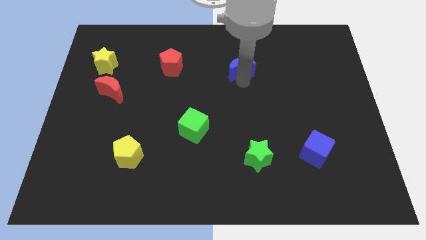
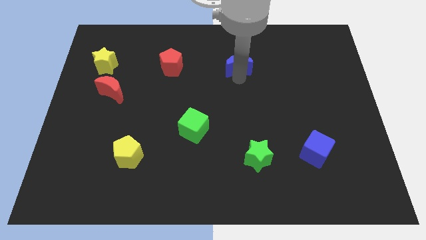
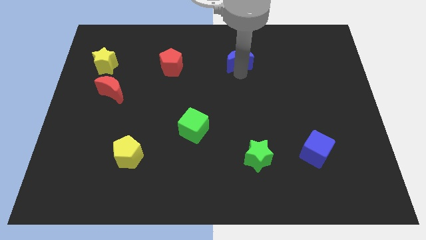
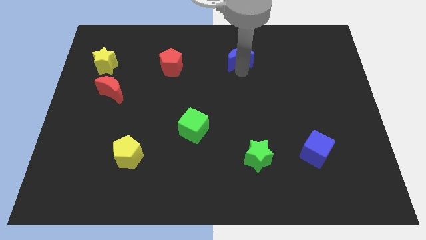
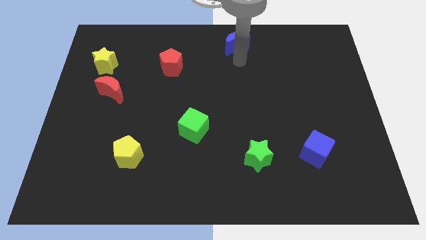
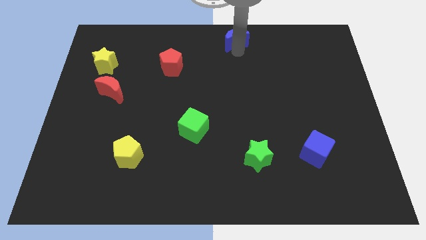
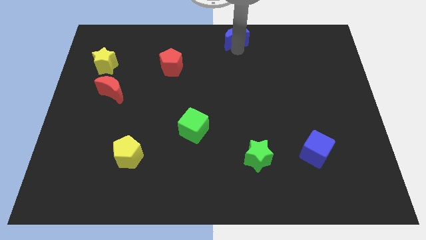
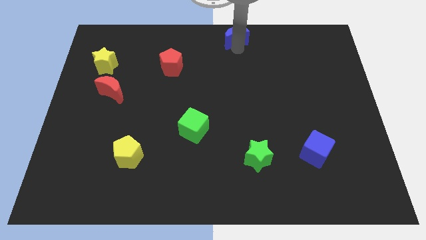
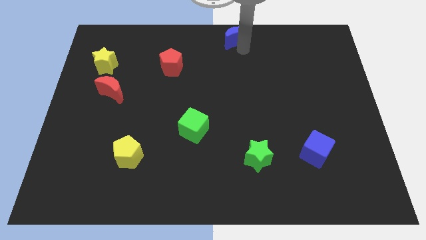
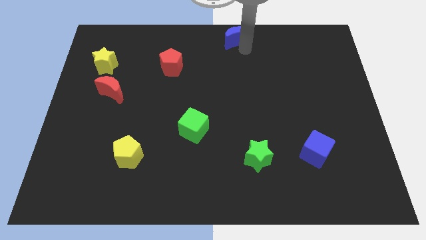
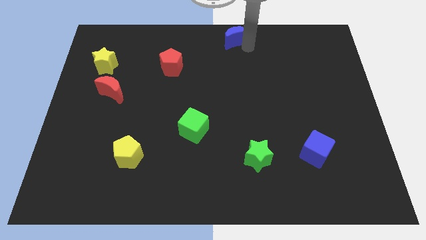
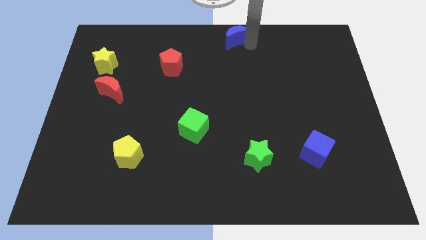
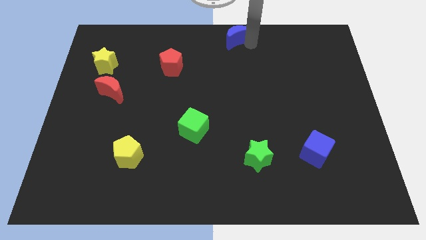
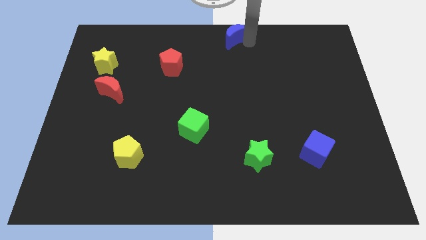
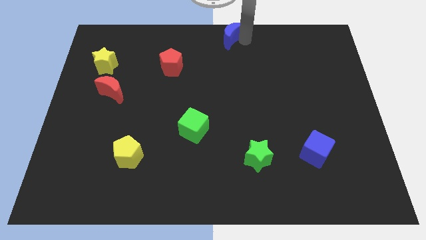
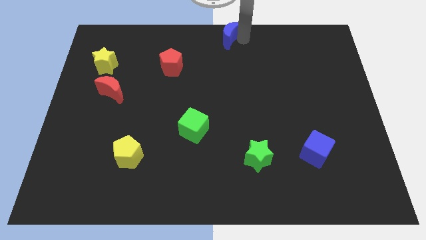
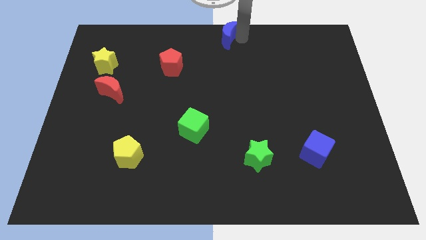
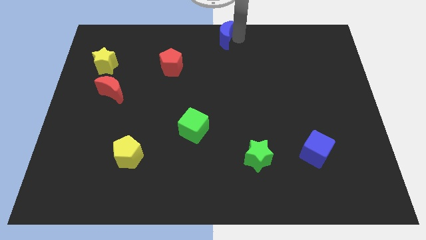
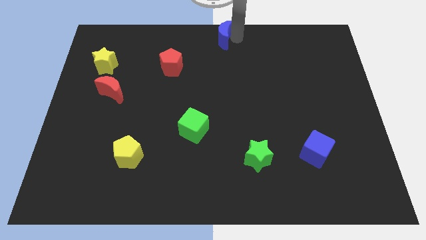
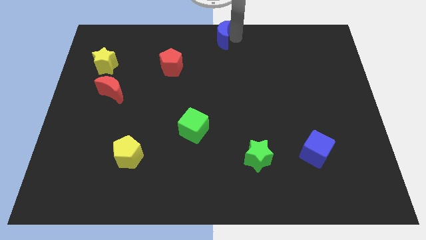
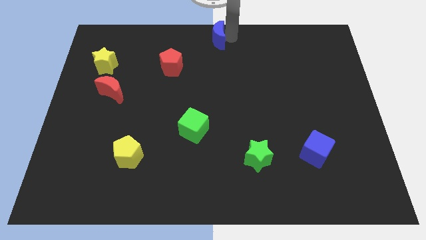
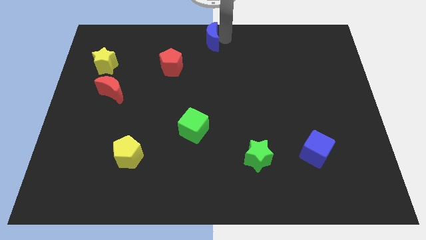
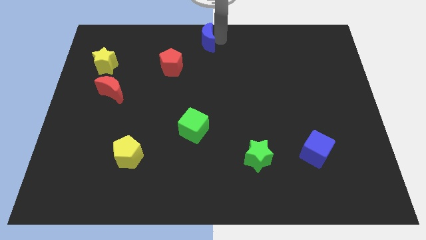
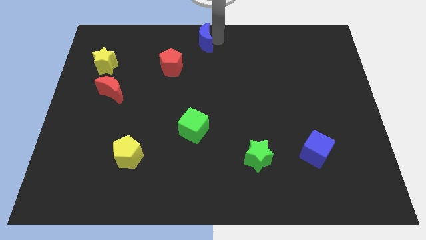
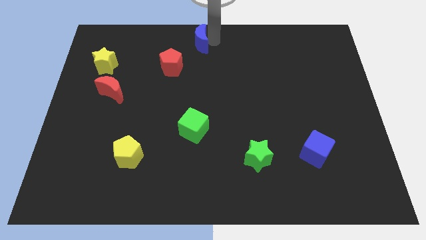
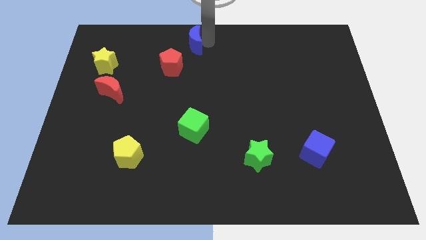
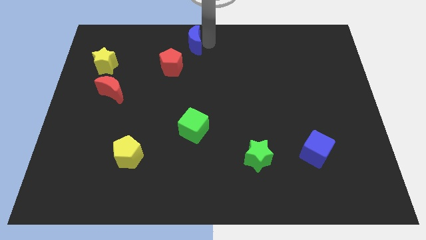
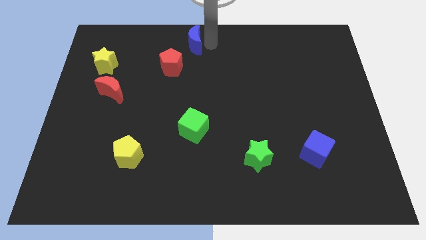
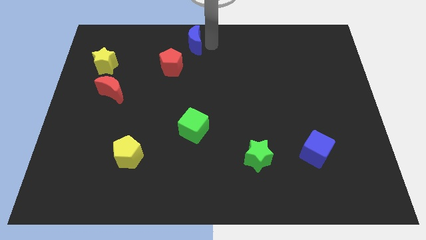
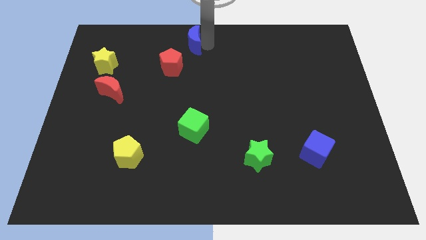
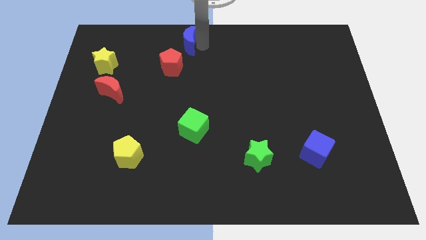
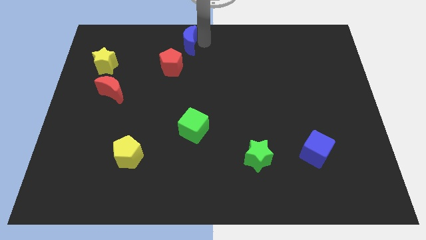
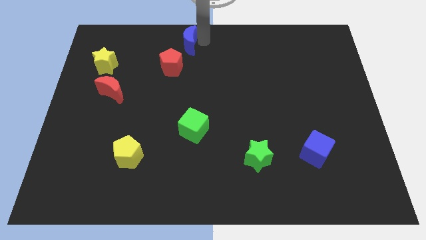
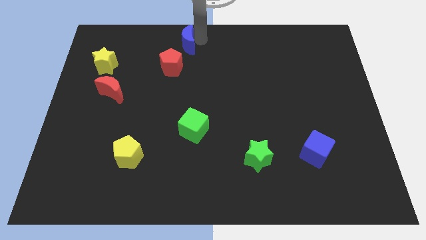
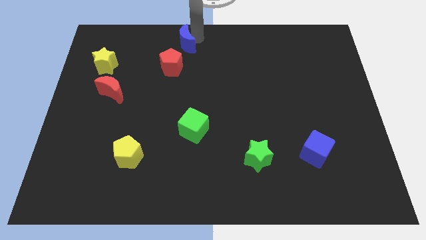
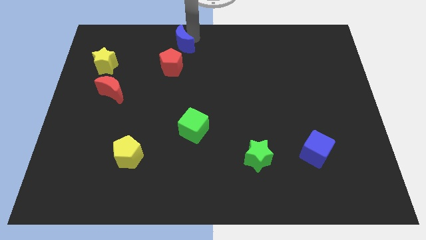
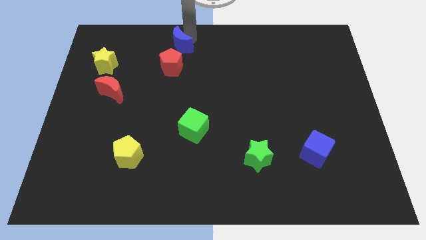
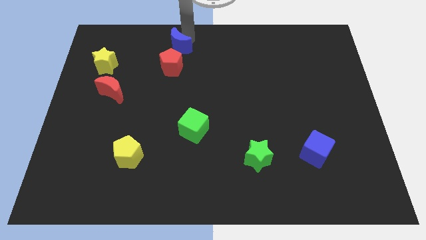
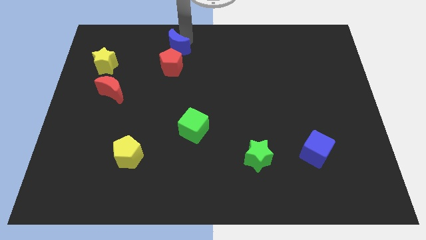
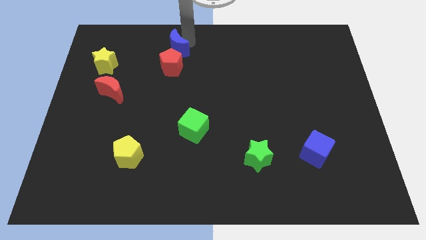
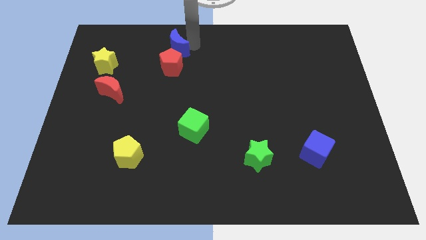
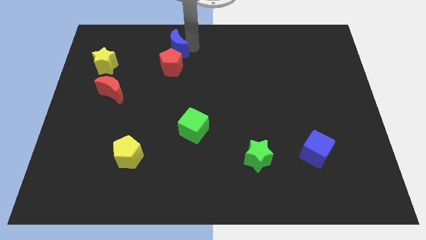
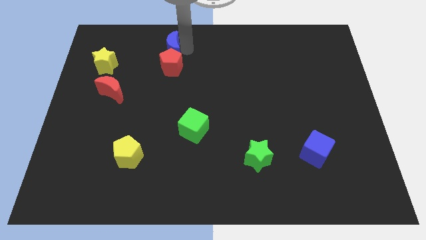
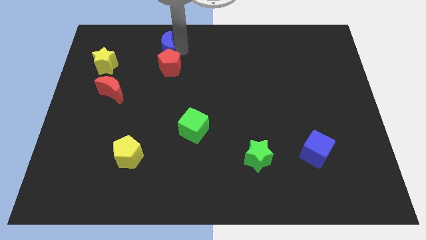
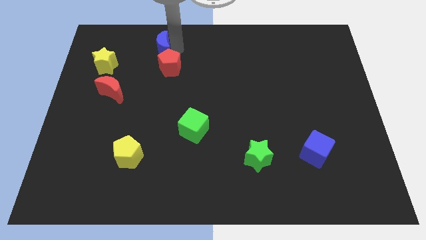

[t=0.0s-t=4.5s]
place the blue moon above the red pentagon

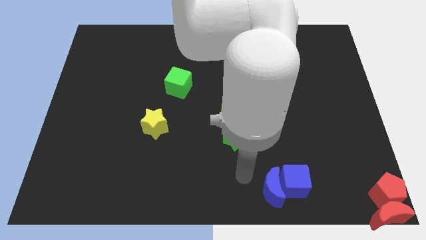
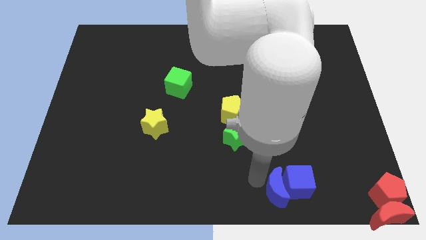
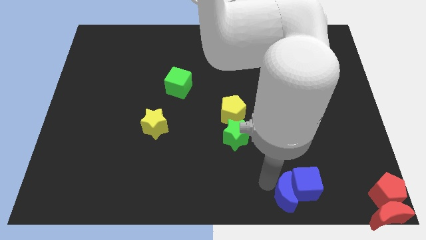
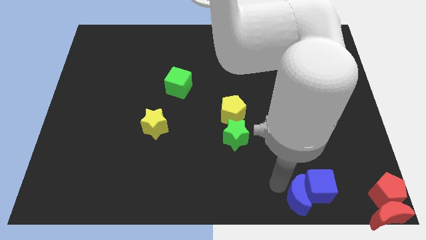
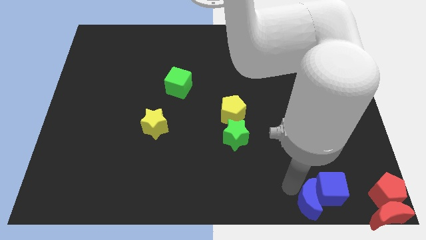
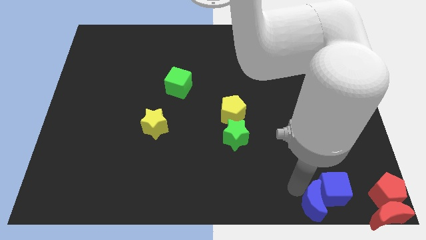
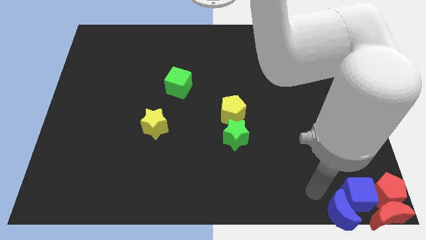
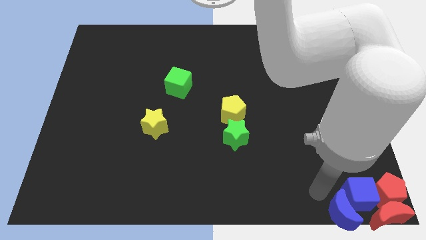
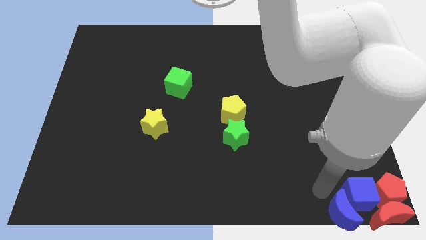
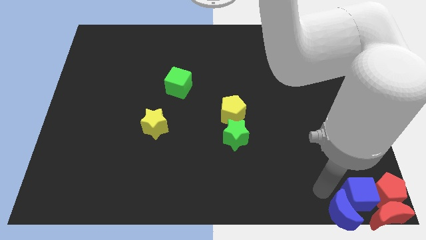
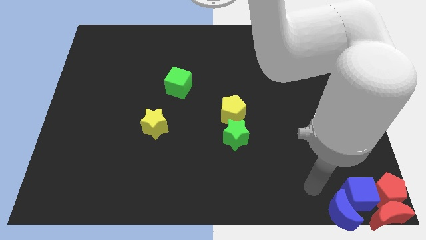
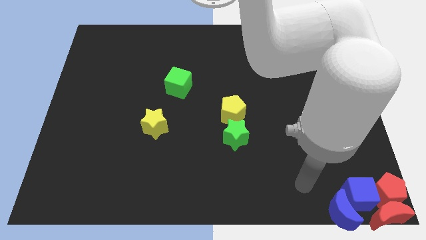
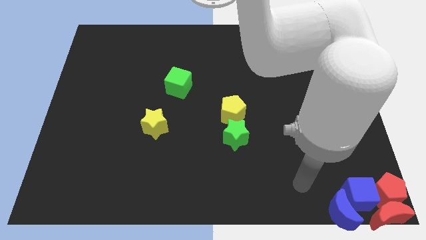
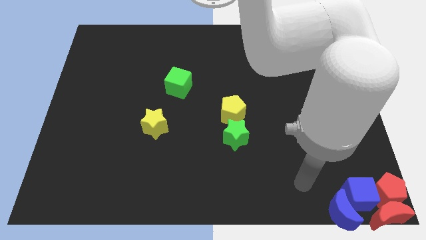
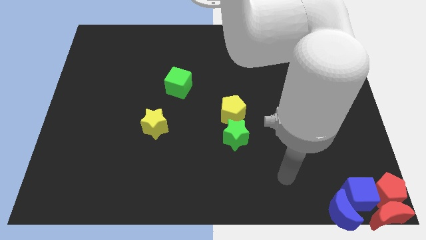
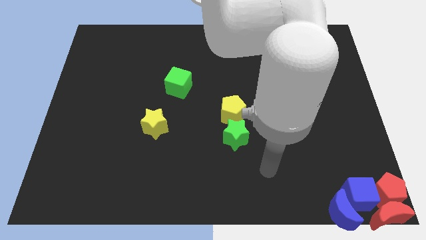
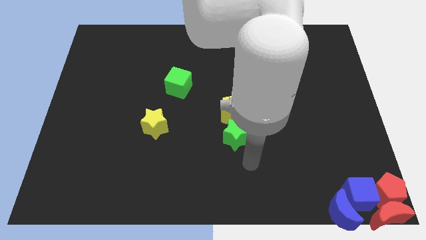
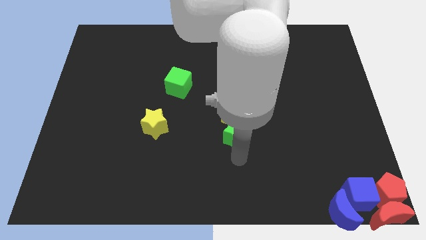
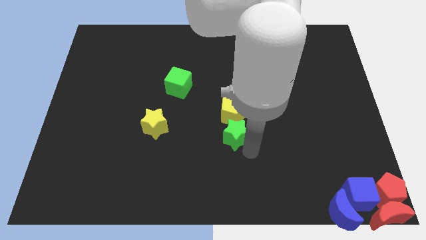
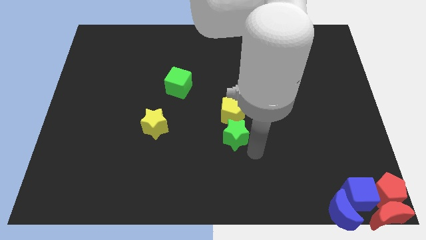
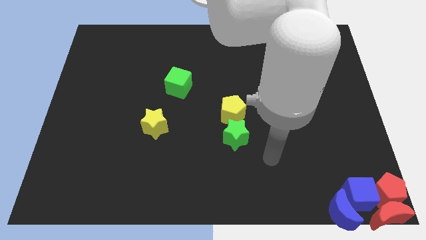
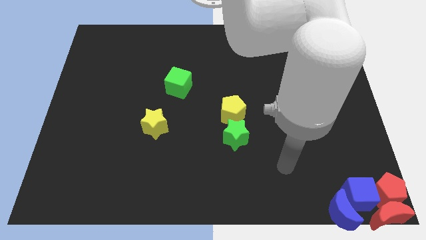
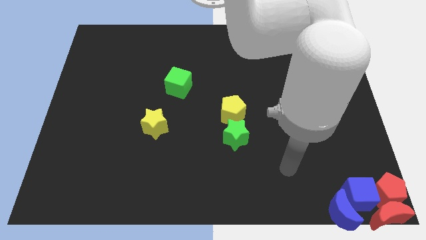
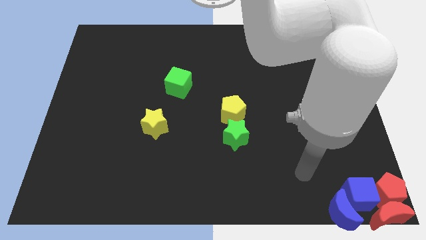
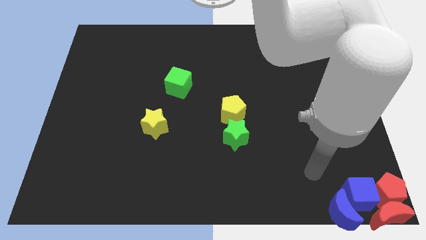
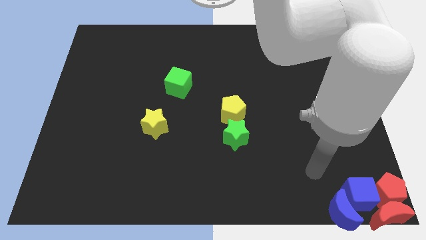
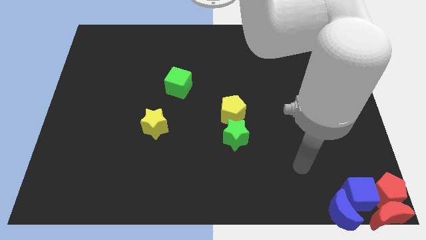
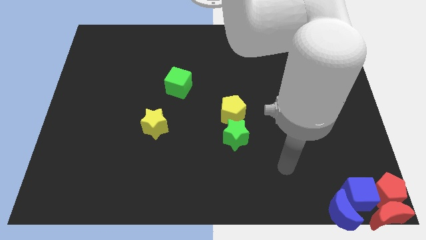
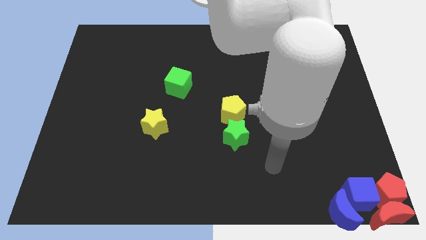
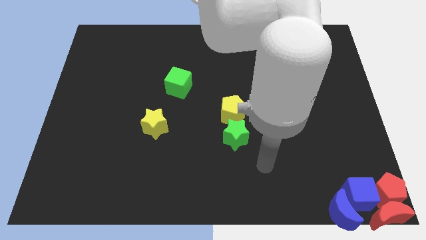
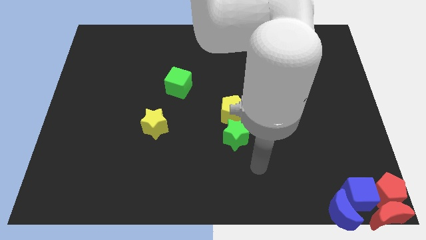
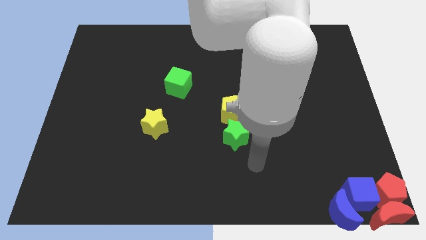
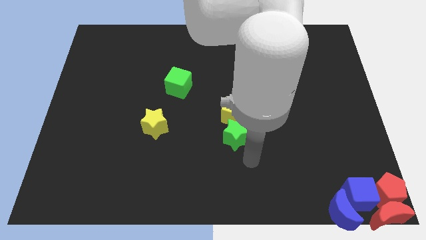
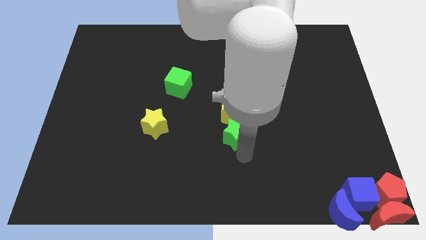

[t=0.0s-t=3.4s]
place the blue blocks to the left side of the red blocks

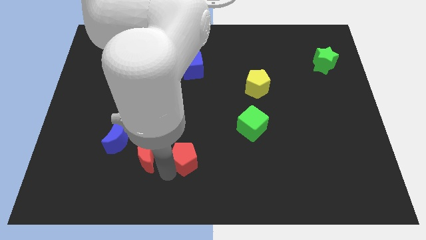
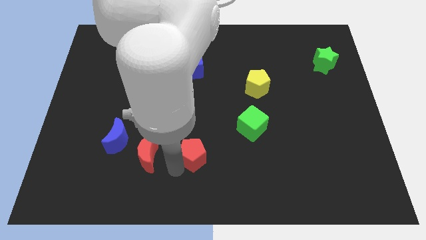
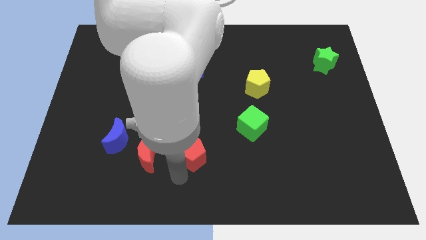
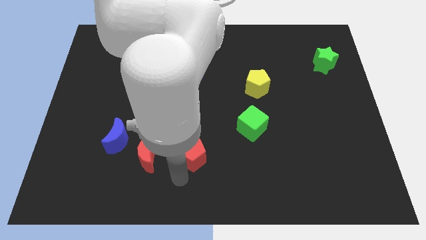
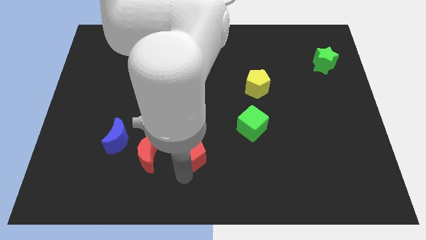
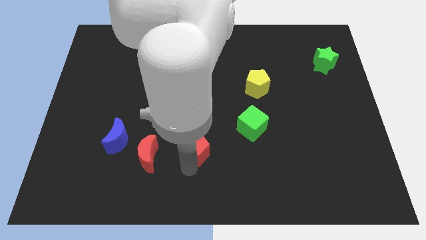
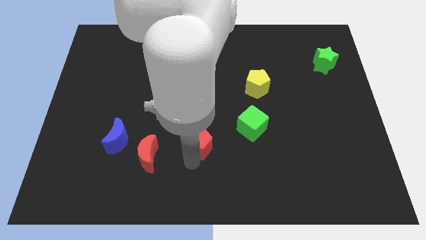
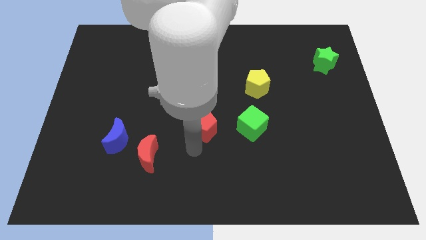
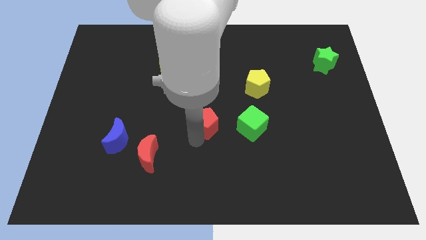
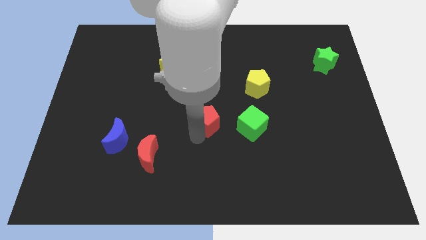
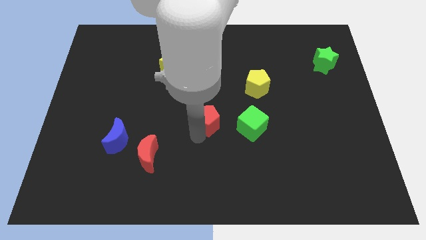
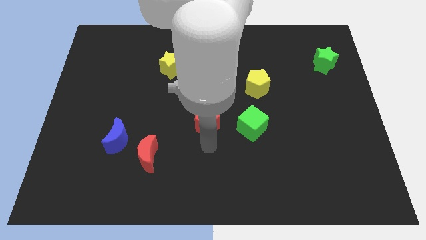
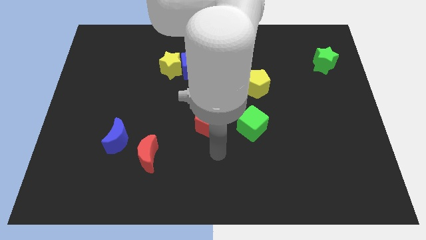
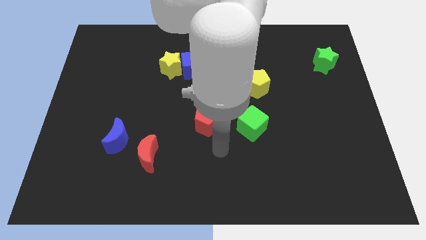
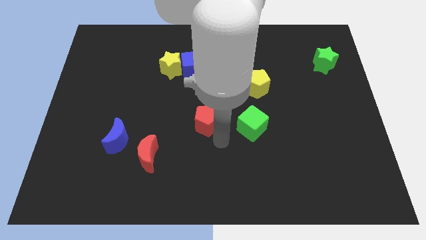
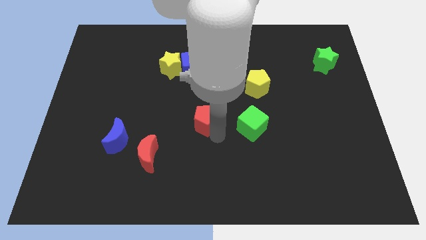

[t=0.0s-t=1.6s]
move the red pentagon to the center of the board
